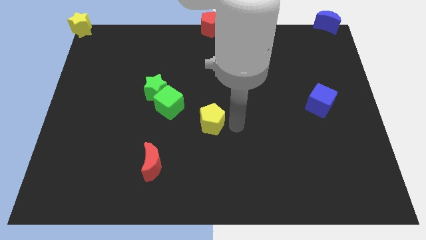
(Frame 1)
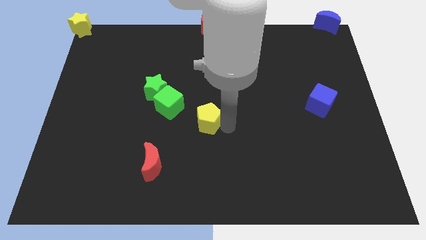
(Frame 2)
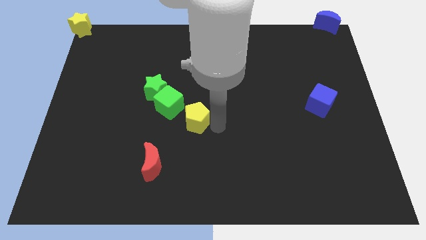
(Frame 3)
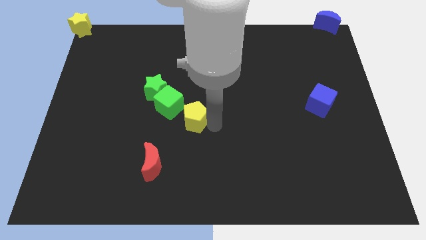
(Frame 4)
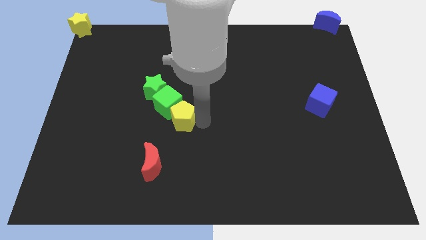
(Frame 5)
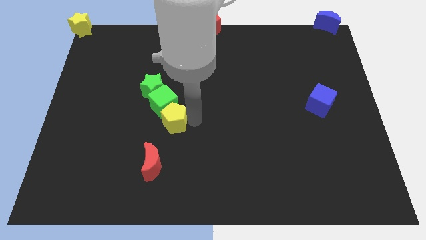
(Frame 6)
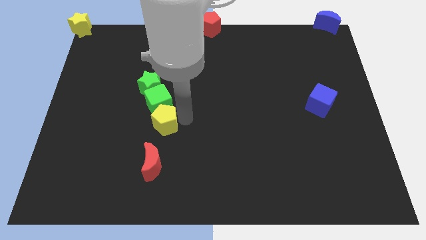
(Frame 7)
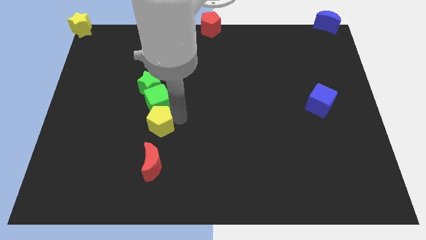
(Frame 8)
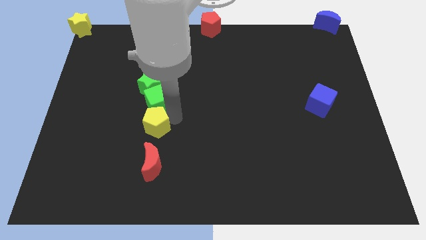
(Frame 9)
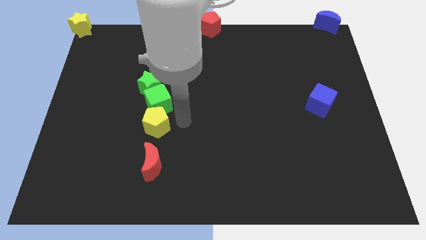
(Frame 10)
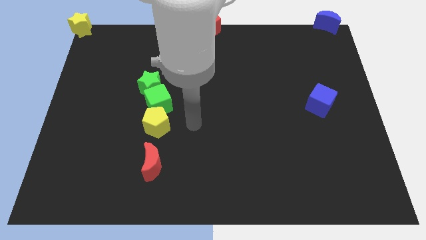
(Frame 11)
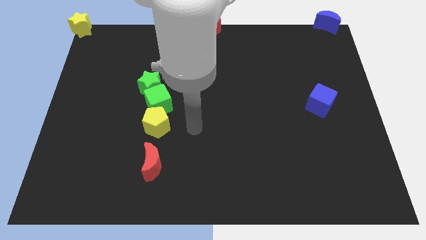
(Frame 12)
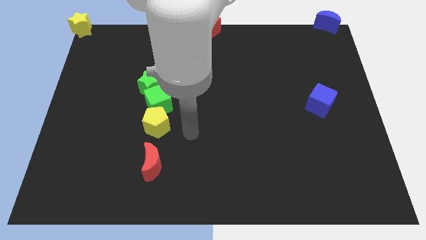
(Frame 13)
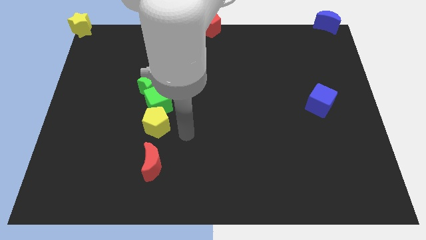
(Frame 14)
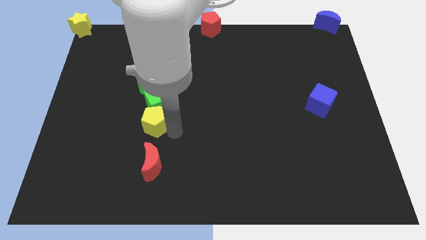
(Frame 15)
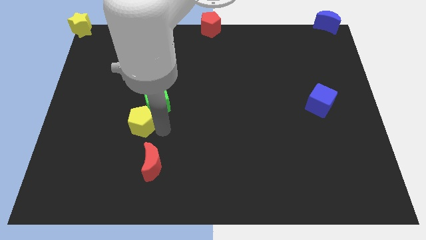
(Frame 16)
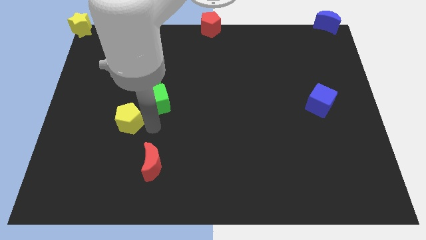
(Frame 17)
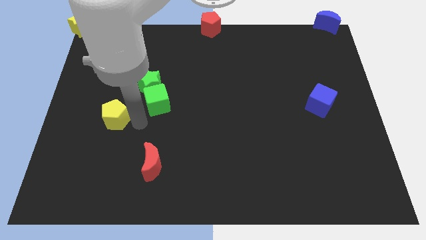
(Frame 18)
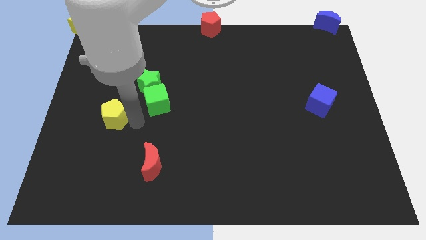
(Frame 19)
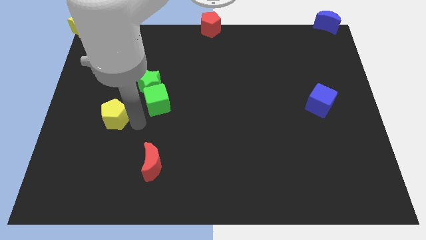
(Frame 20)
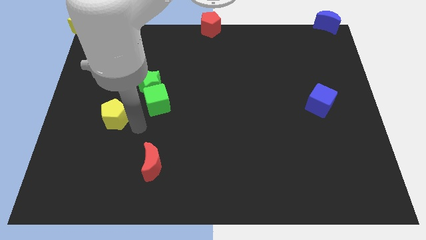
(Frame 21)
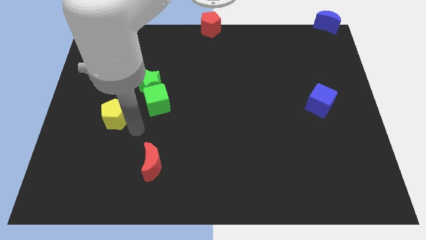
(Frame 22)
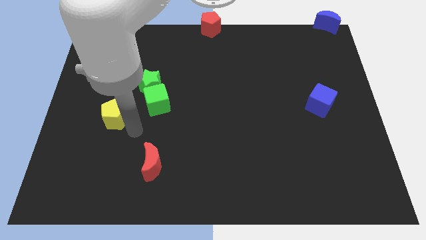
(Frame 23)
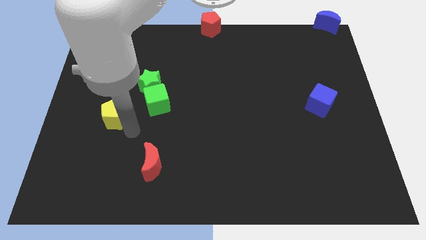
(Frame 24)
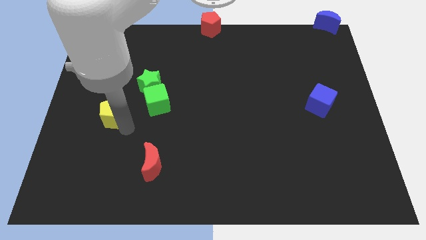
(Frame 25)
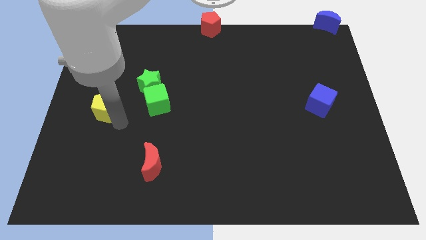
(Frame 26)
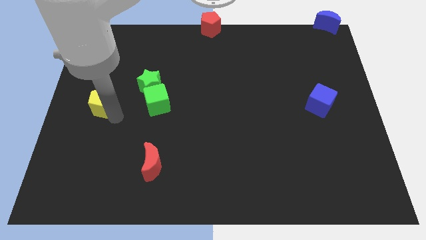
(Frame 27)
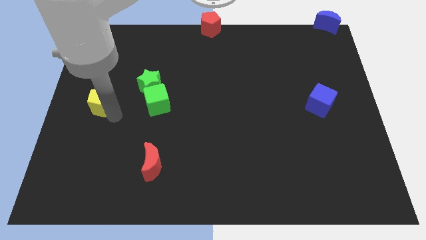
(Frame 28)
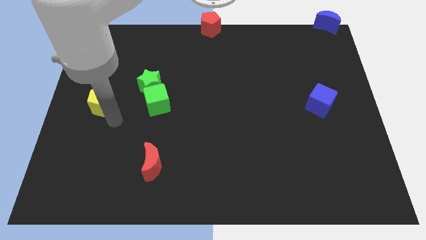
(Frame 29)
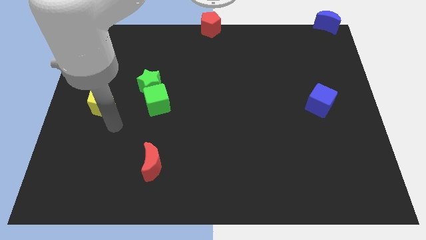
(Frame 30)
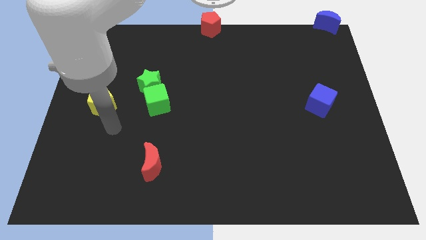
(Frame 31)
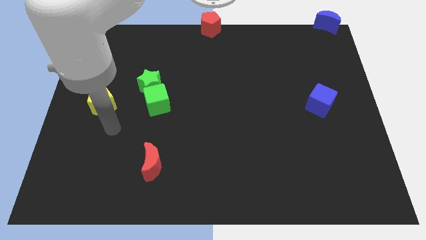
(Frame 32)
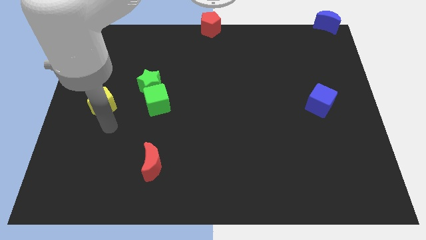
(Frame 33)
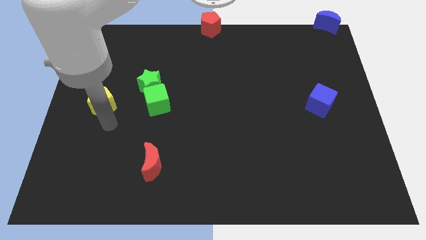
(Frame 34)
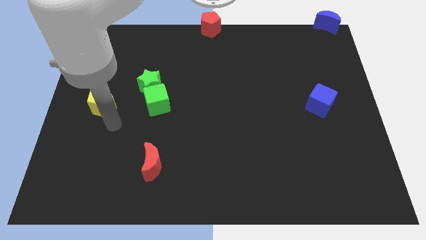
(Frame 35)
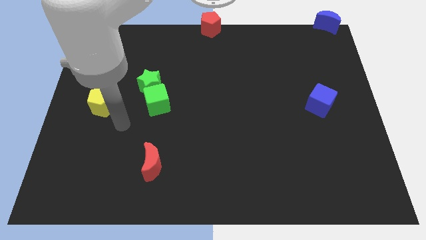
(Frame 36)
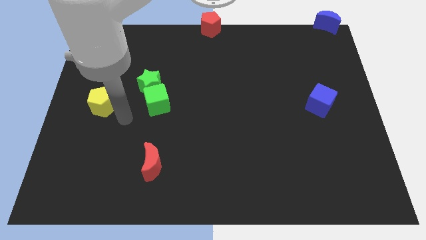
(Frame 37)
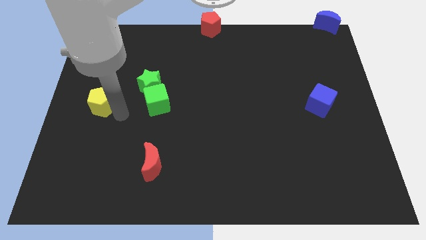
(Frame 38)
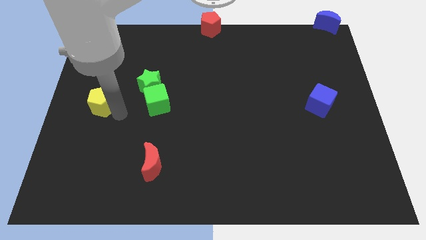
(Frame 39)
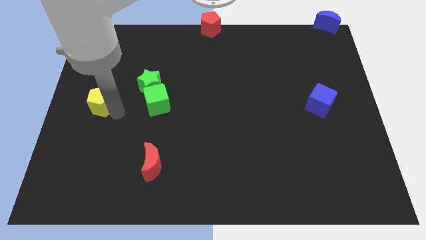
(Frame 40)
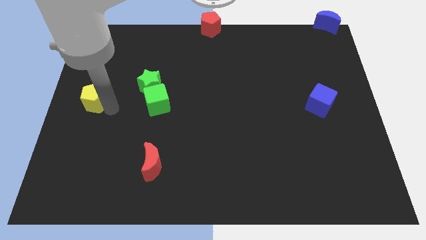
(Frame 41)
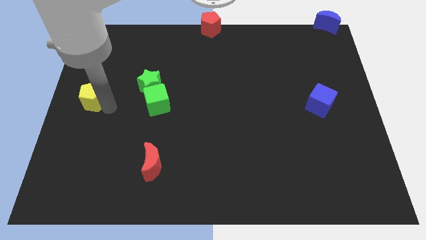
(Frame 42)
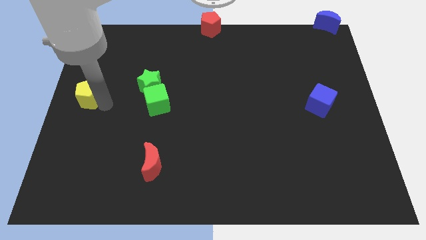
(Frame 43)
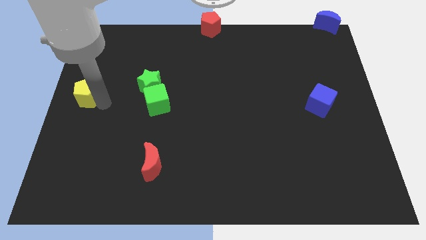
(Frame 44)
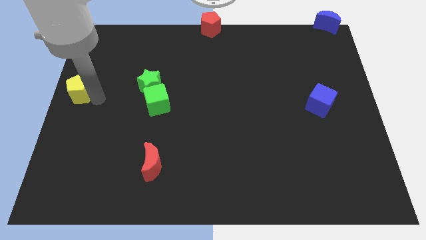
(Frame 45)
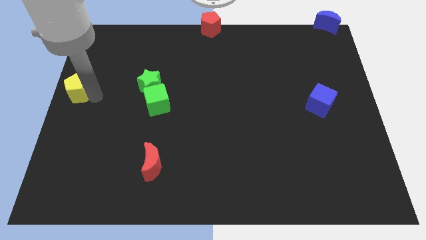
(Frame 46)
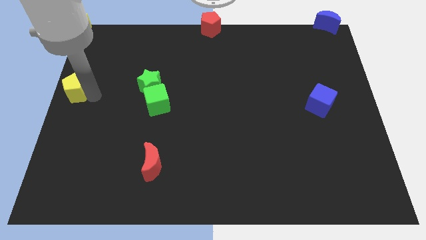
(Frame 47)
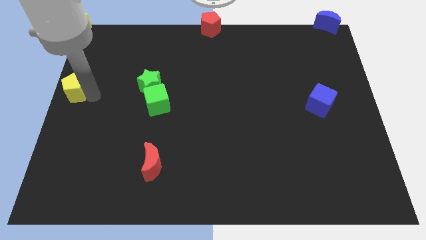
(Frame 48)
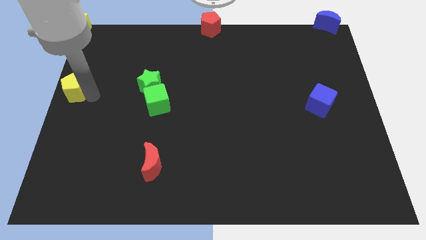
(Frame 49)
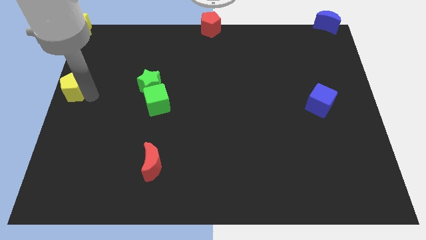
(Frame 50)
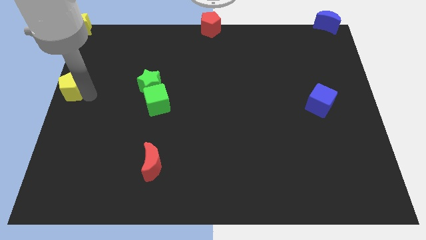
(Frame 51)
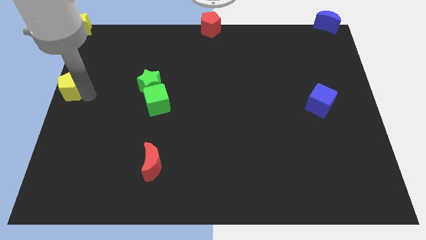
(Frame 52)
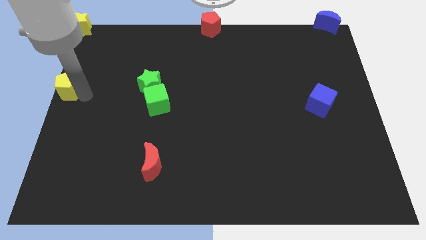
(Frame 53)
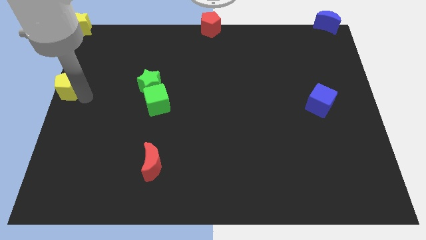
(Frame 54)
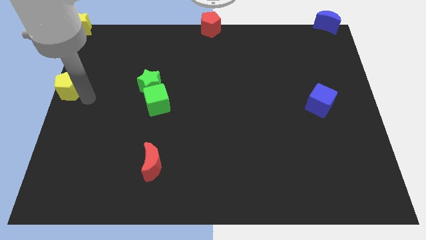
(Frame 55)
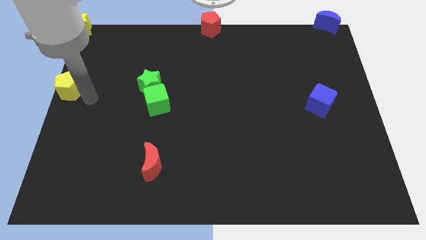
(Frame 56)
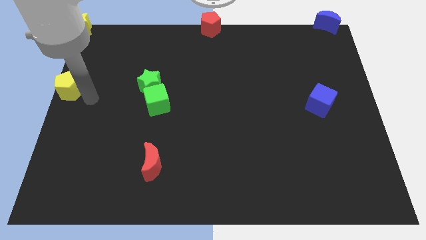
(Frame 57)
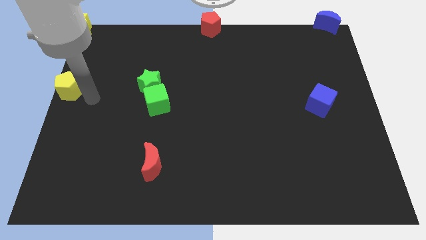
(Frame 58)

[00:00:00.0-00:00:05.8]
move the yellow pentagon to the horizontal left side of the green star

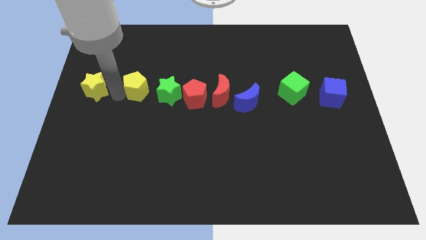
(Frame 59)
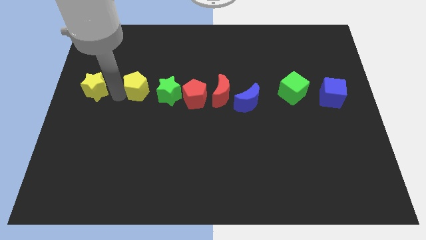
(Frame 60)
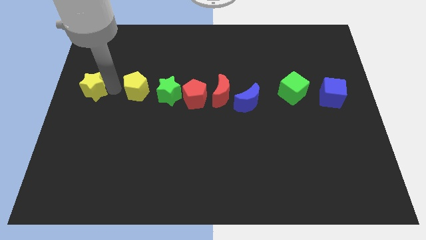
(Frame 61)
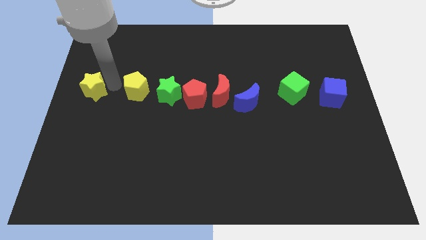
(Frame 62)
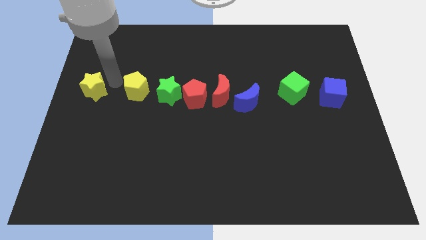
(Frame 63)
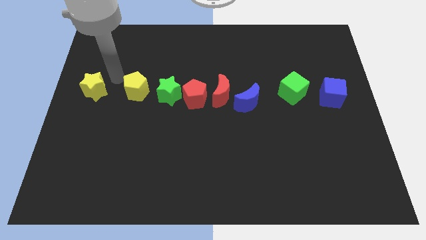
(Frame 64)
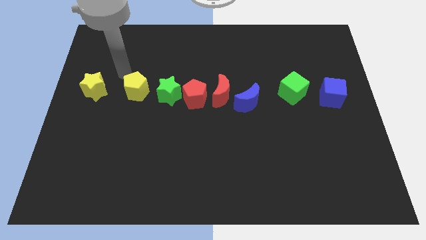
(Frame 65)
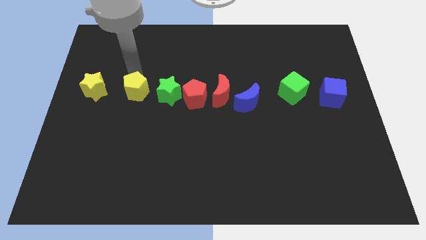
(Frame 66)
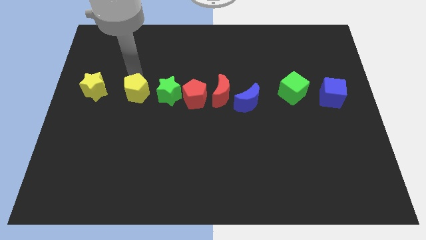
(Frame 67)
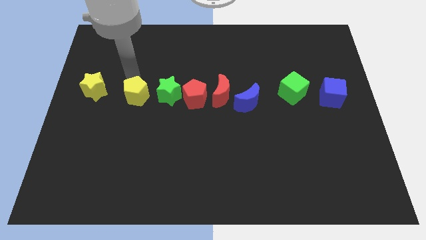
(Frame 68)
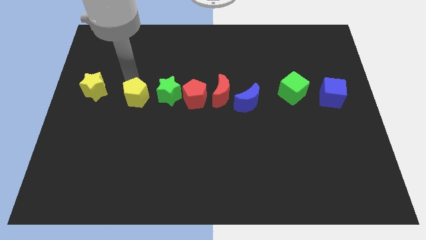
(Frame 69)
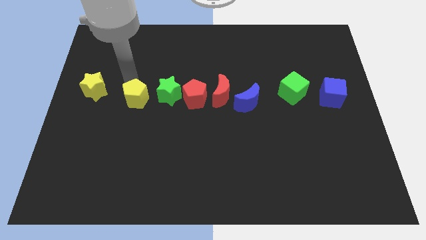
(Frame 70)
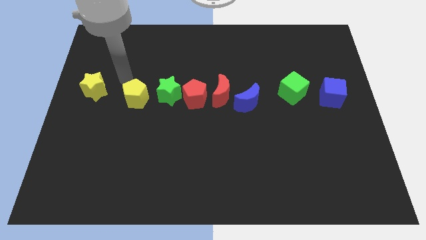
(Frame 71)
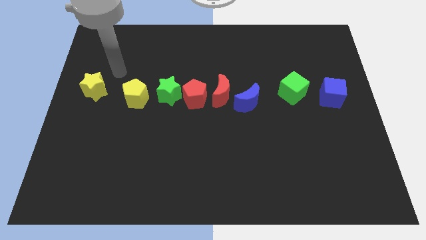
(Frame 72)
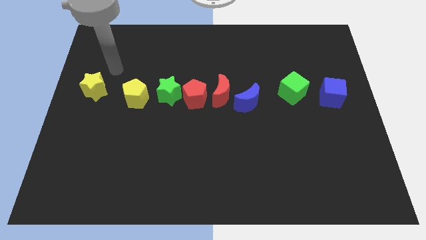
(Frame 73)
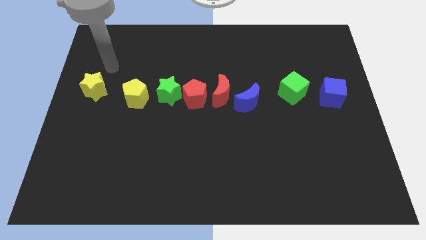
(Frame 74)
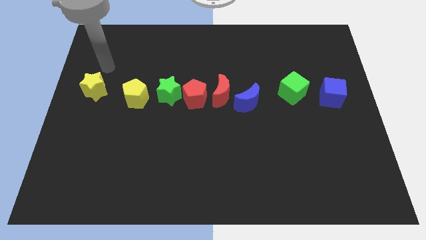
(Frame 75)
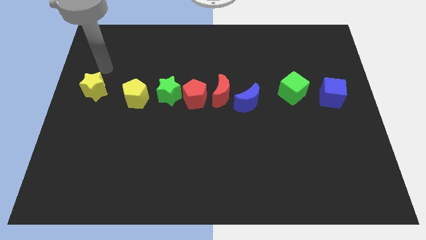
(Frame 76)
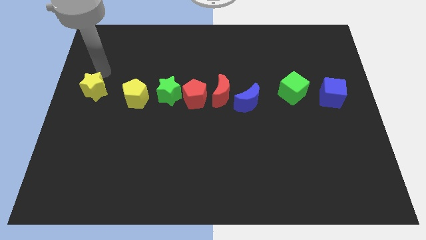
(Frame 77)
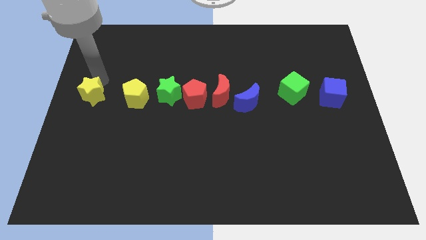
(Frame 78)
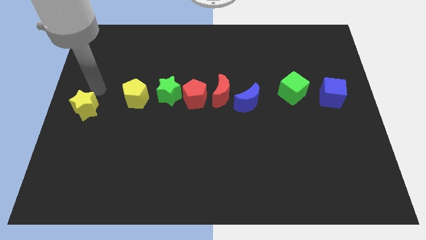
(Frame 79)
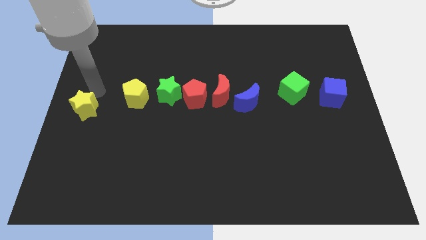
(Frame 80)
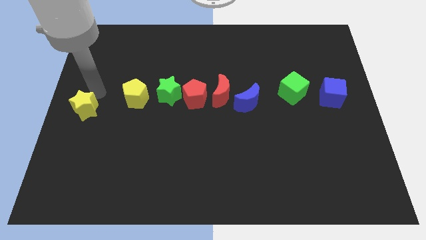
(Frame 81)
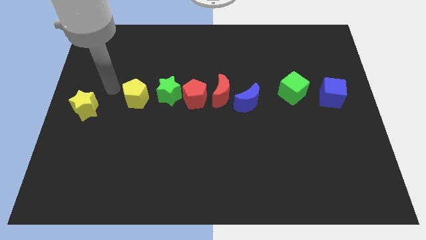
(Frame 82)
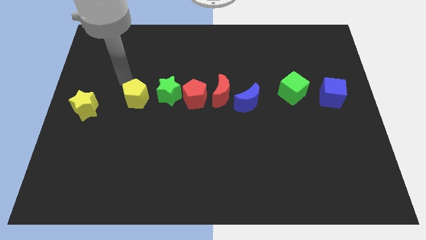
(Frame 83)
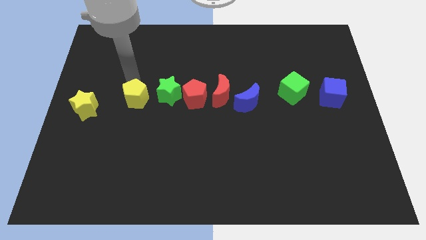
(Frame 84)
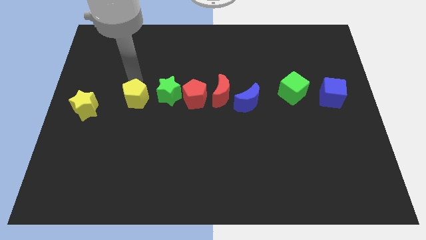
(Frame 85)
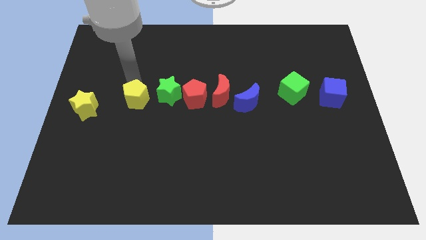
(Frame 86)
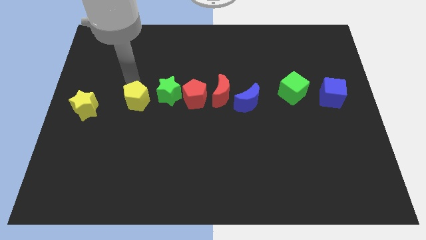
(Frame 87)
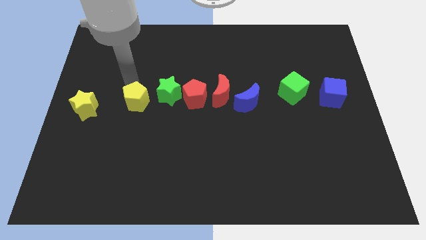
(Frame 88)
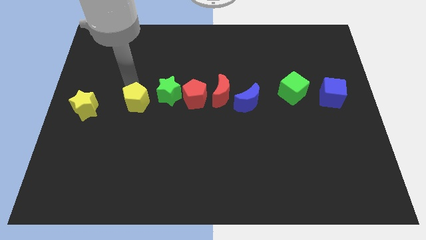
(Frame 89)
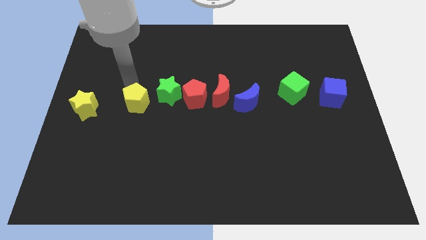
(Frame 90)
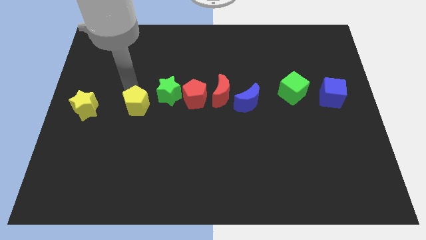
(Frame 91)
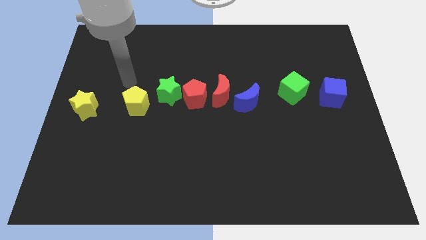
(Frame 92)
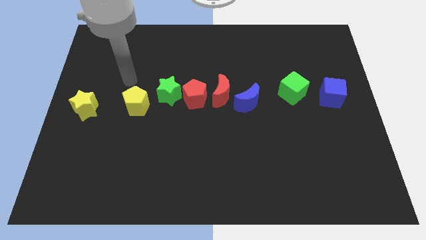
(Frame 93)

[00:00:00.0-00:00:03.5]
push the yellow blocks slightly towards the bottom side of the board
